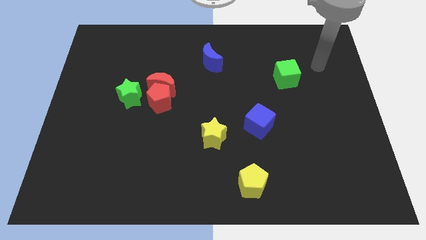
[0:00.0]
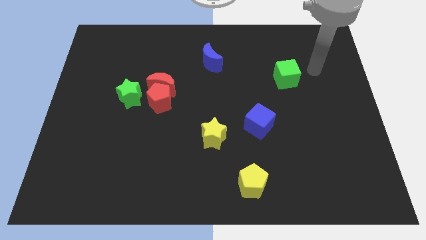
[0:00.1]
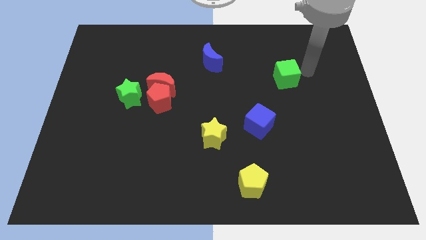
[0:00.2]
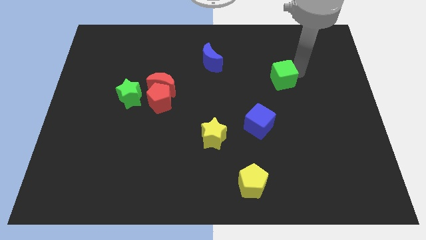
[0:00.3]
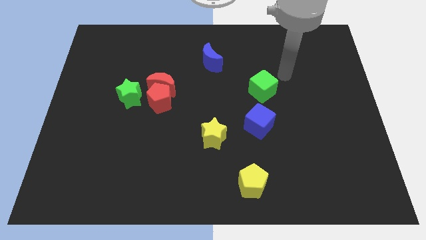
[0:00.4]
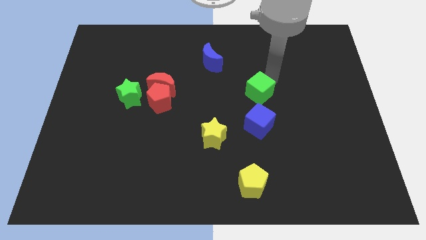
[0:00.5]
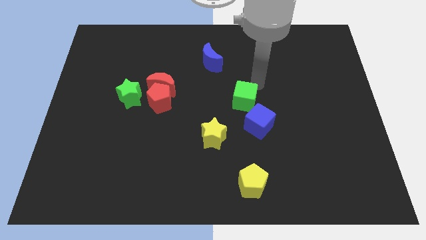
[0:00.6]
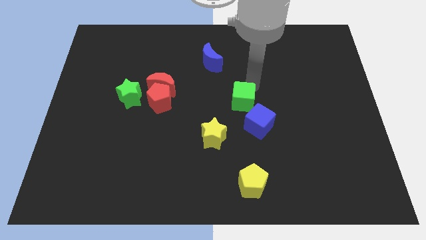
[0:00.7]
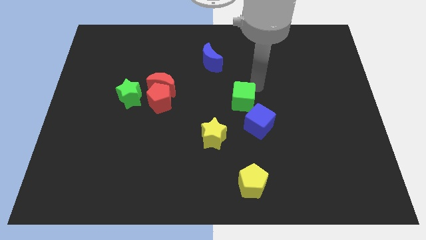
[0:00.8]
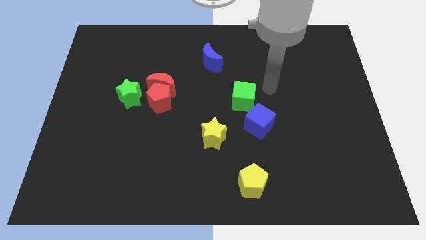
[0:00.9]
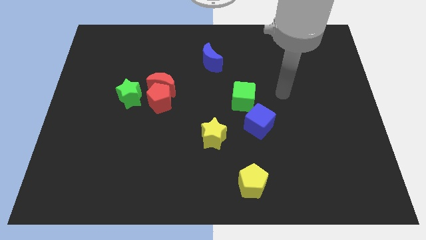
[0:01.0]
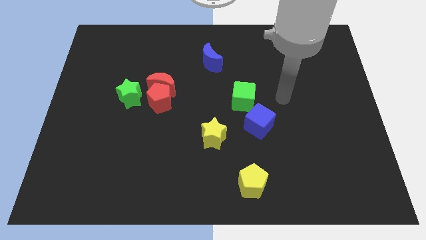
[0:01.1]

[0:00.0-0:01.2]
place the green cube above the blue cube

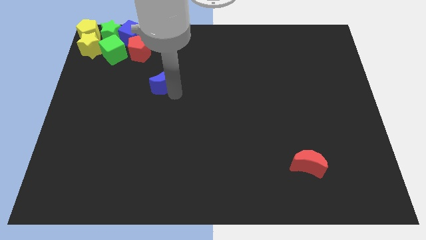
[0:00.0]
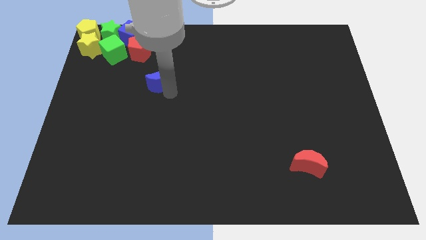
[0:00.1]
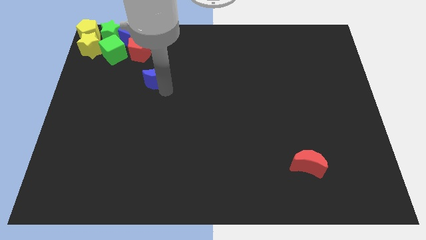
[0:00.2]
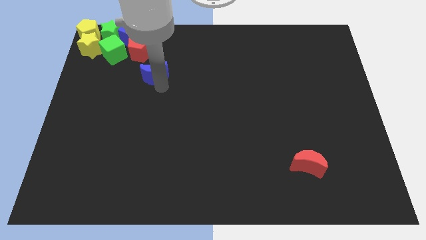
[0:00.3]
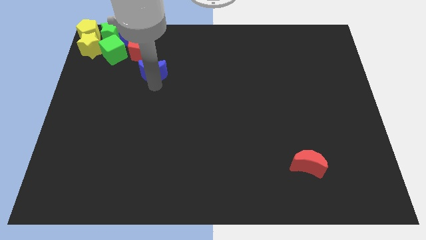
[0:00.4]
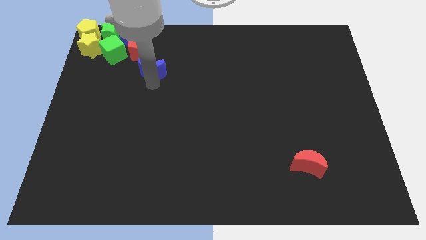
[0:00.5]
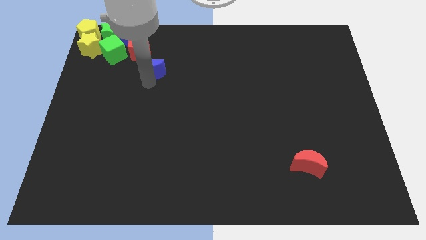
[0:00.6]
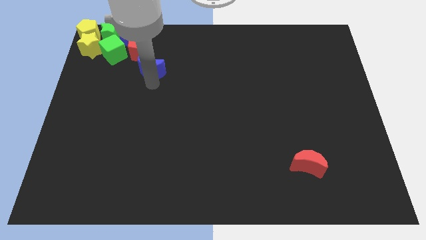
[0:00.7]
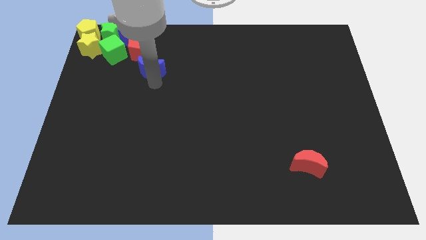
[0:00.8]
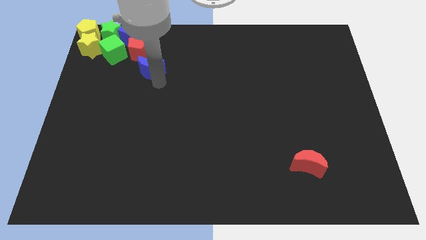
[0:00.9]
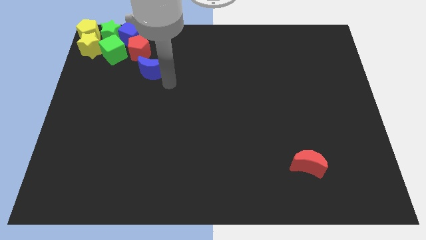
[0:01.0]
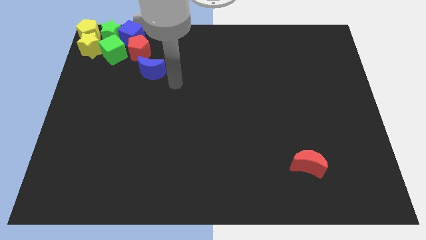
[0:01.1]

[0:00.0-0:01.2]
place the blue crescent towards the bottom right side of the red pentagon

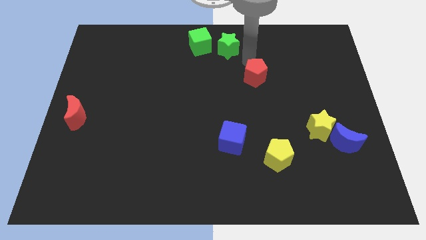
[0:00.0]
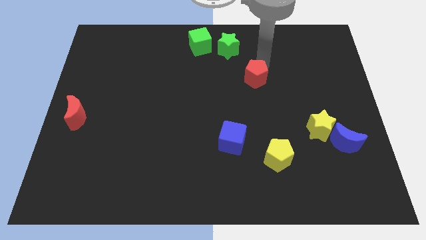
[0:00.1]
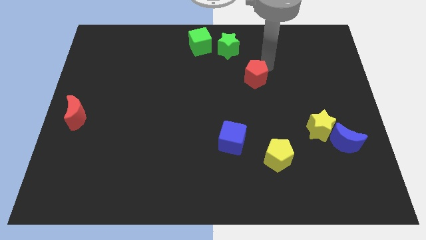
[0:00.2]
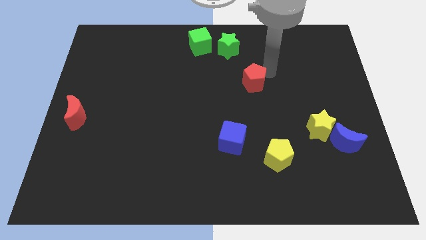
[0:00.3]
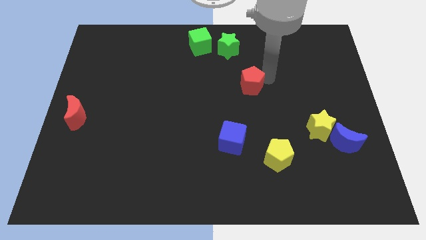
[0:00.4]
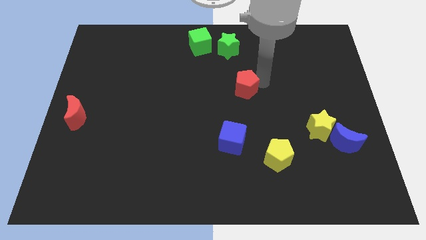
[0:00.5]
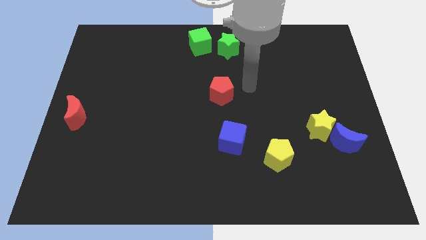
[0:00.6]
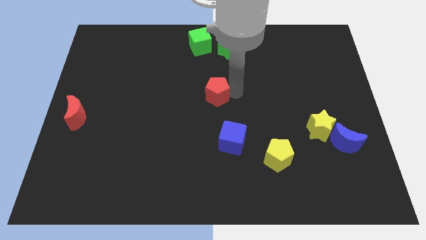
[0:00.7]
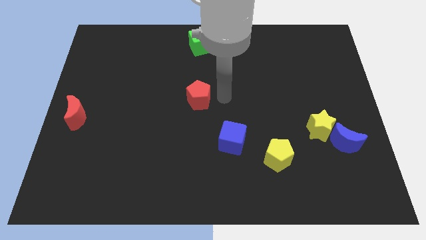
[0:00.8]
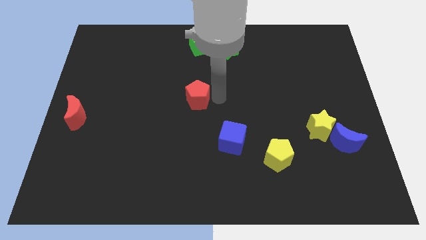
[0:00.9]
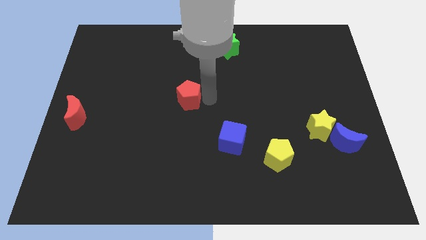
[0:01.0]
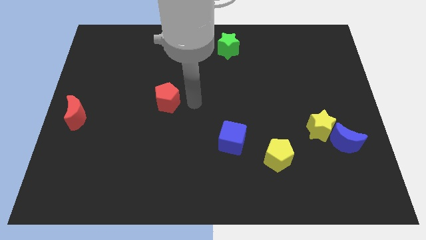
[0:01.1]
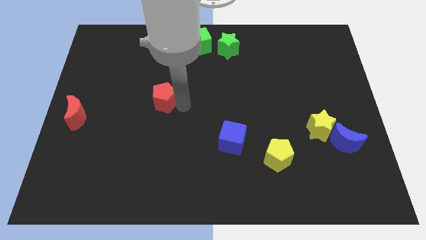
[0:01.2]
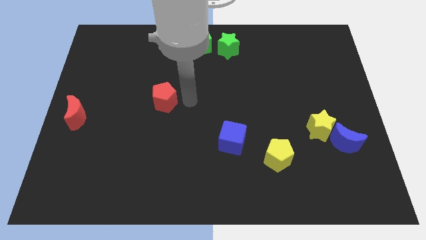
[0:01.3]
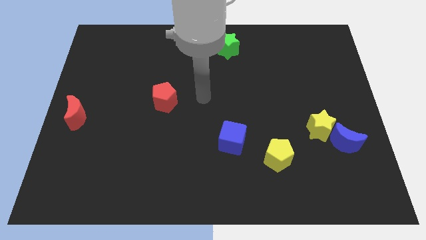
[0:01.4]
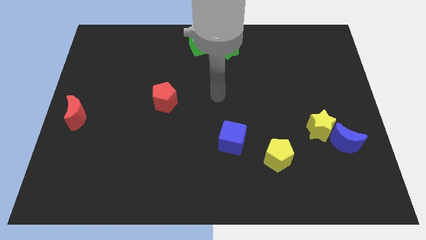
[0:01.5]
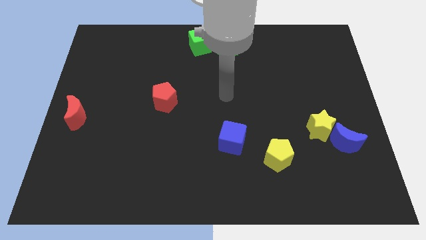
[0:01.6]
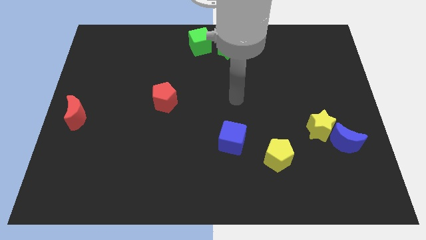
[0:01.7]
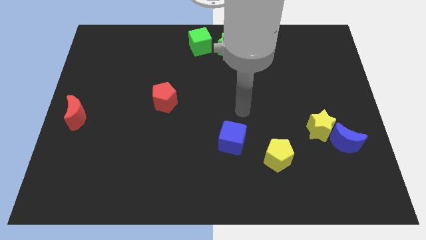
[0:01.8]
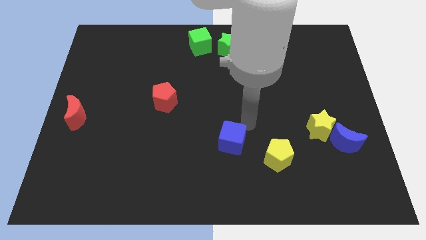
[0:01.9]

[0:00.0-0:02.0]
move the red pentagon towards the center left of the board

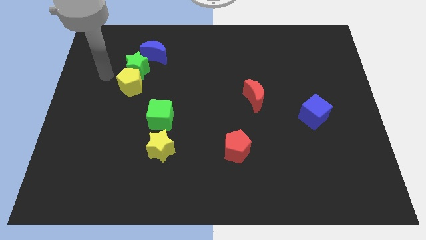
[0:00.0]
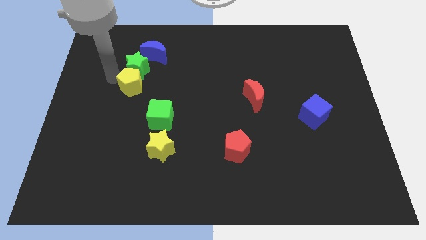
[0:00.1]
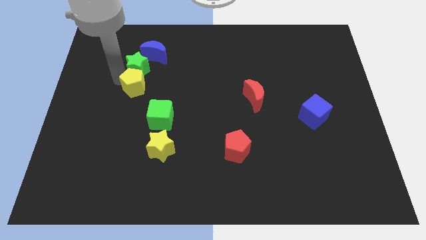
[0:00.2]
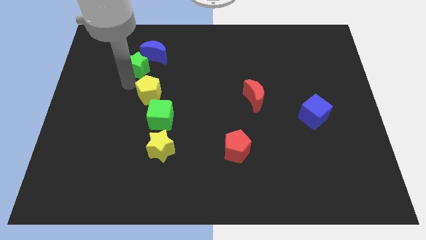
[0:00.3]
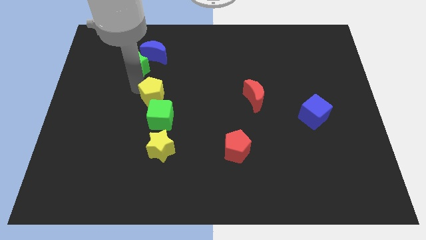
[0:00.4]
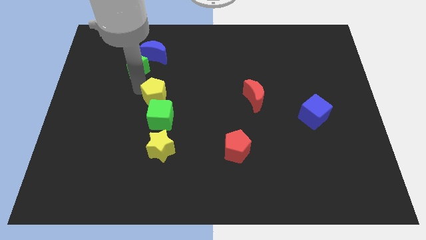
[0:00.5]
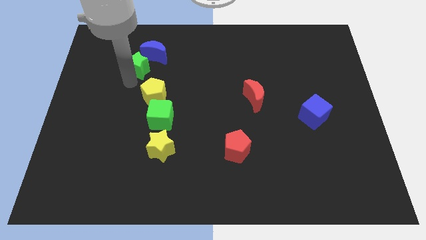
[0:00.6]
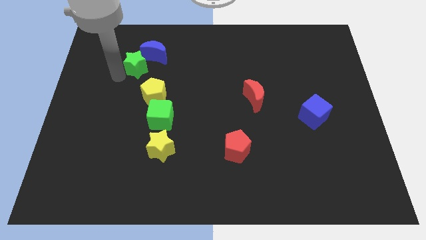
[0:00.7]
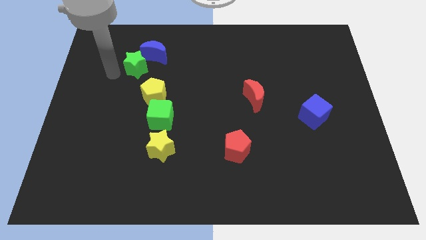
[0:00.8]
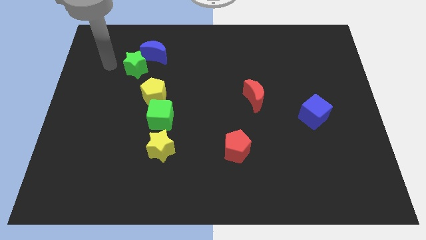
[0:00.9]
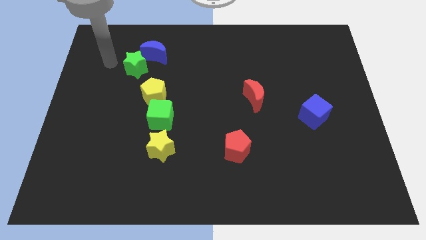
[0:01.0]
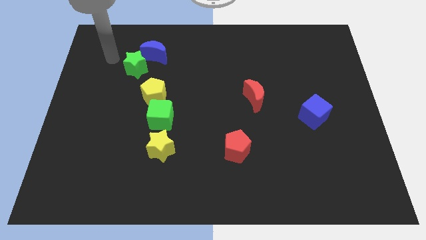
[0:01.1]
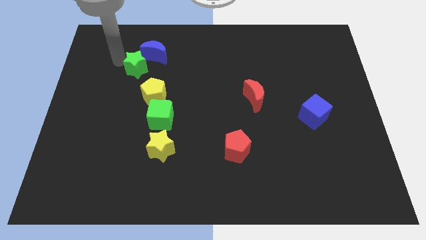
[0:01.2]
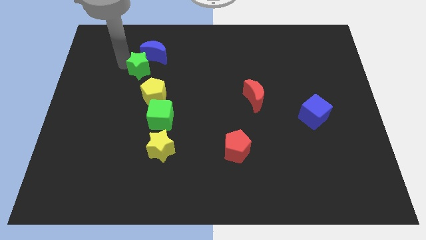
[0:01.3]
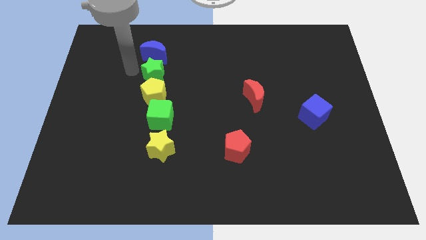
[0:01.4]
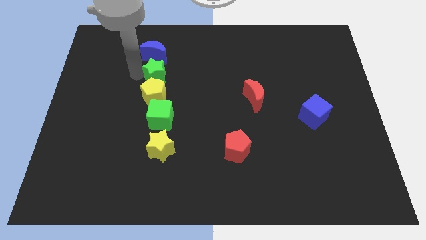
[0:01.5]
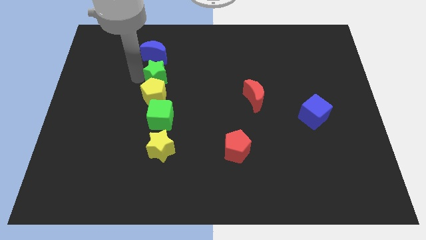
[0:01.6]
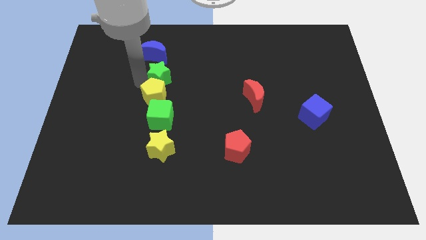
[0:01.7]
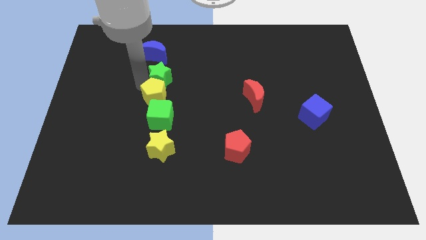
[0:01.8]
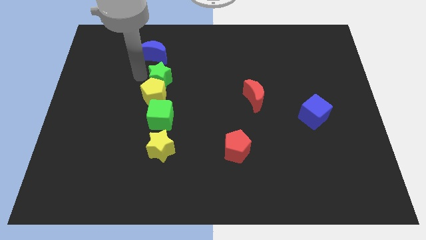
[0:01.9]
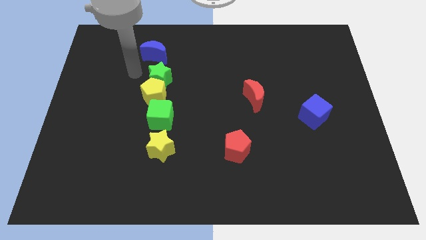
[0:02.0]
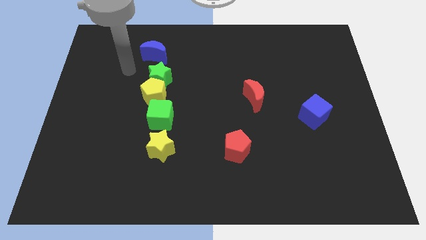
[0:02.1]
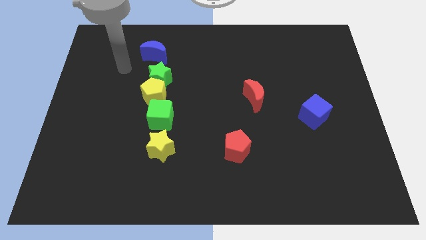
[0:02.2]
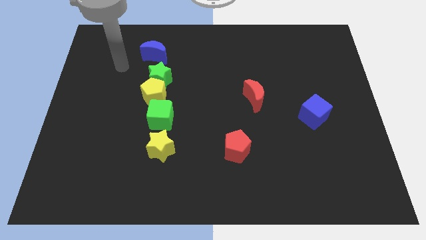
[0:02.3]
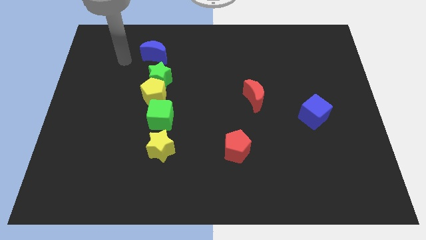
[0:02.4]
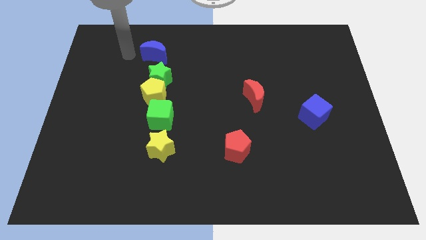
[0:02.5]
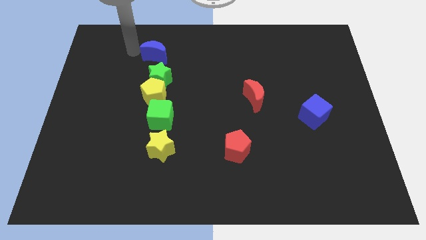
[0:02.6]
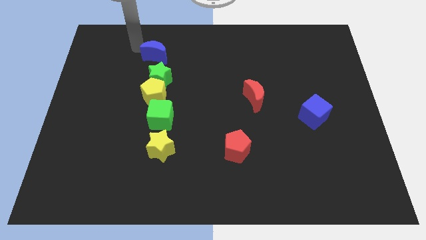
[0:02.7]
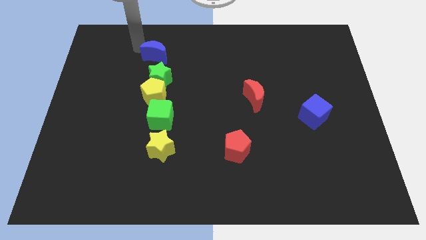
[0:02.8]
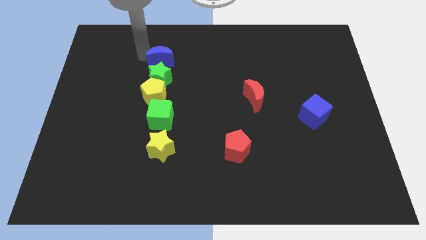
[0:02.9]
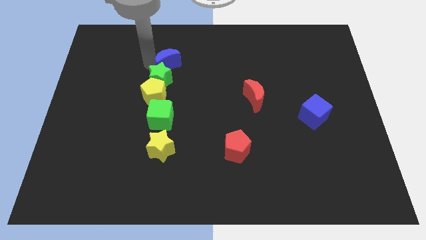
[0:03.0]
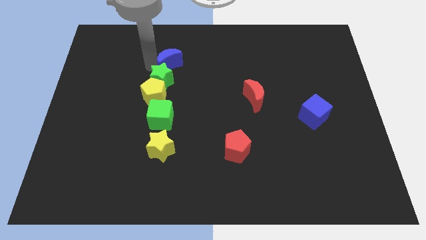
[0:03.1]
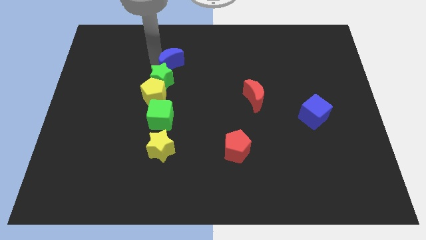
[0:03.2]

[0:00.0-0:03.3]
bring the yellow pentagon green star and blue crescent at the top side of the green cube

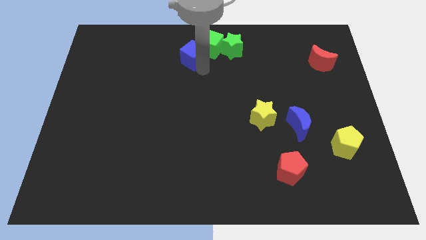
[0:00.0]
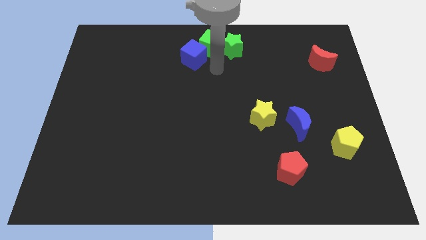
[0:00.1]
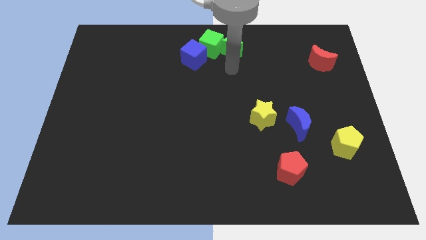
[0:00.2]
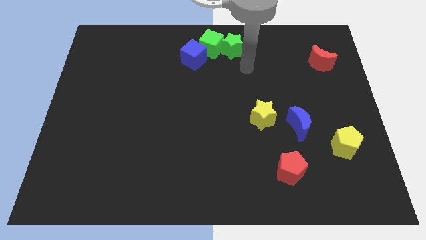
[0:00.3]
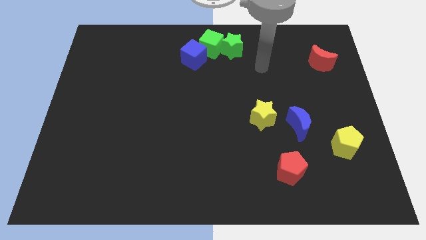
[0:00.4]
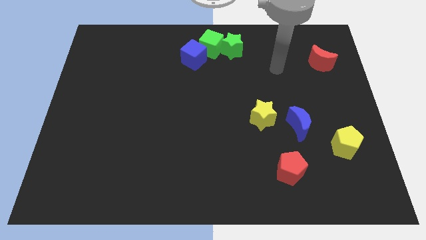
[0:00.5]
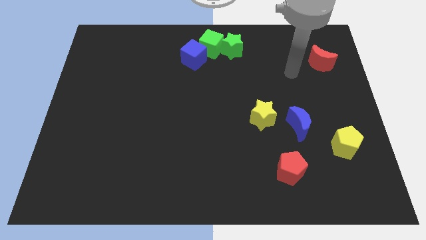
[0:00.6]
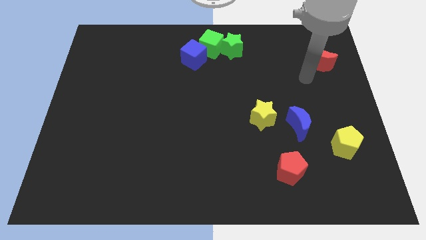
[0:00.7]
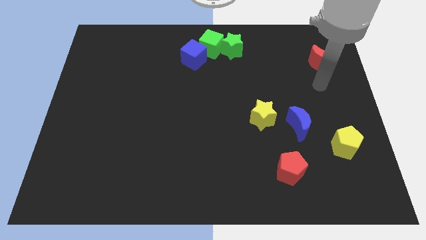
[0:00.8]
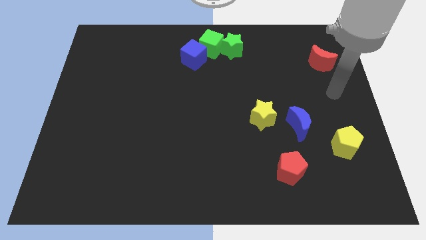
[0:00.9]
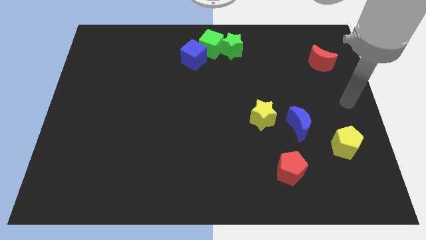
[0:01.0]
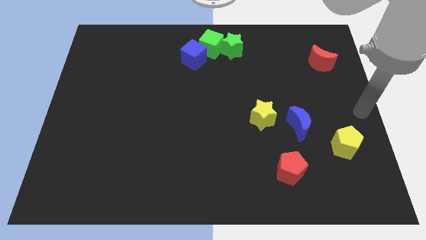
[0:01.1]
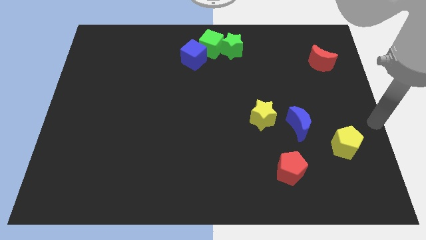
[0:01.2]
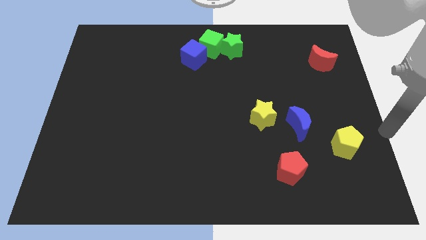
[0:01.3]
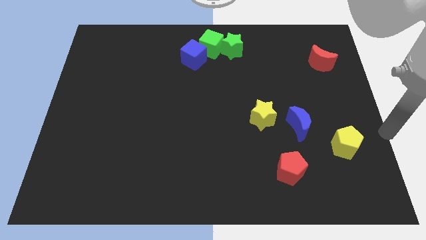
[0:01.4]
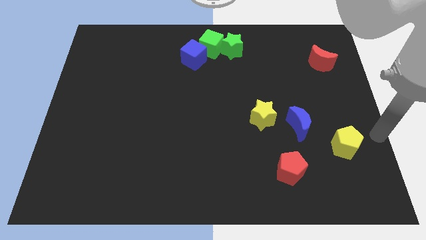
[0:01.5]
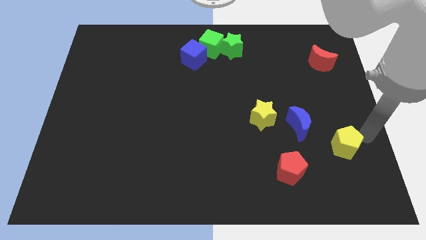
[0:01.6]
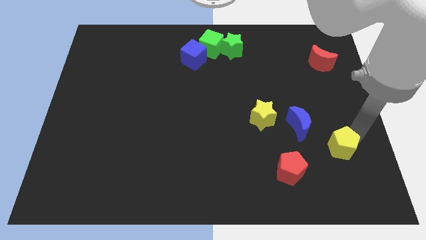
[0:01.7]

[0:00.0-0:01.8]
move your arm towards the yellow pentagon
